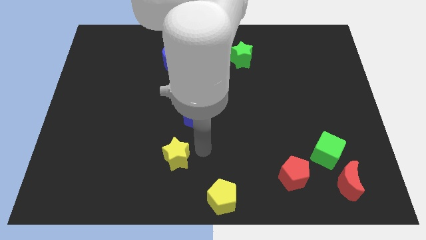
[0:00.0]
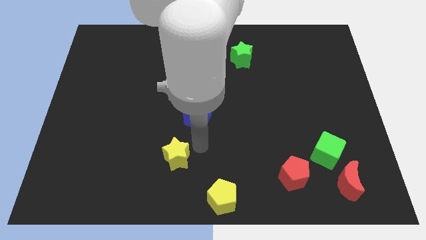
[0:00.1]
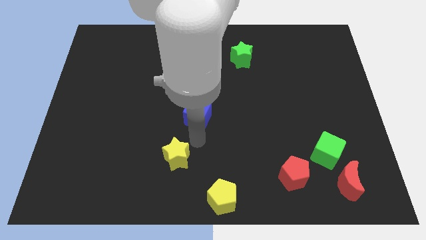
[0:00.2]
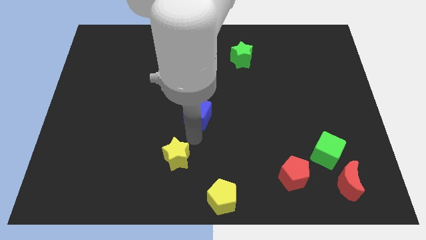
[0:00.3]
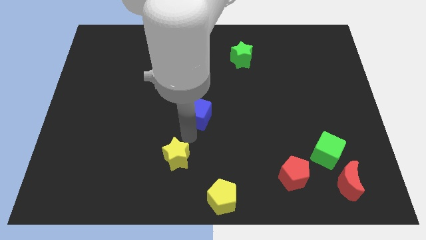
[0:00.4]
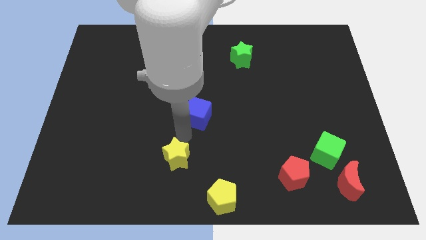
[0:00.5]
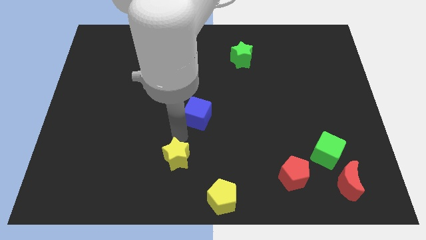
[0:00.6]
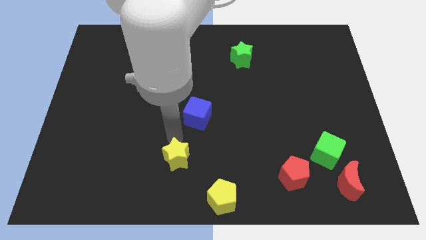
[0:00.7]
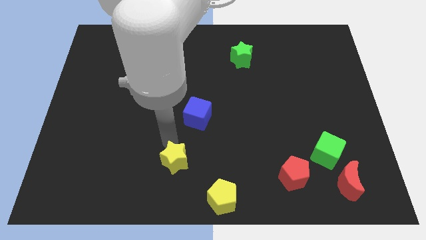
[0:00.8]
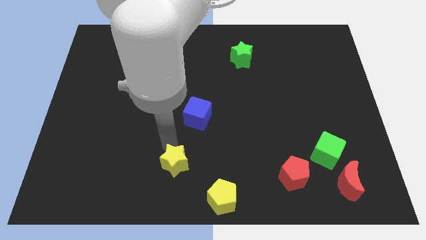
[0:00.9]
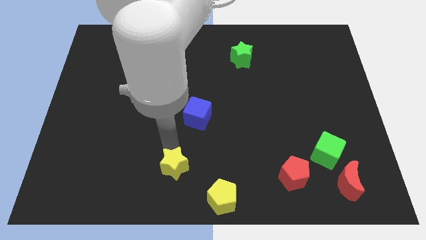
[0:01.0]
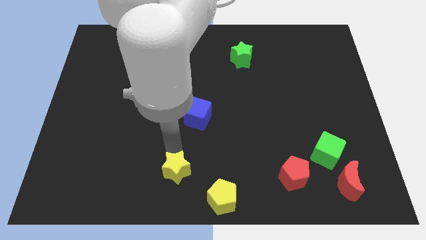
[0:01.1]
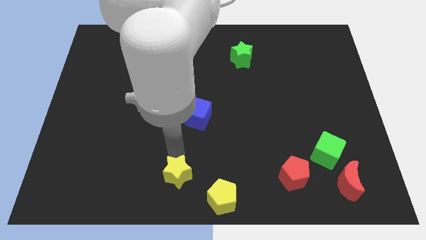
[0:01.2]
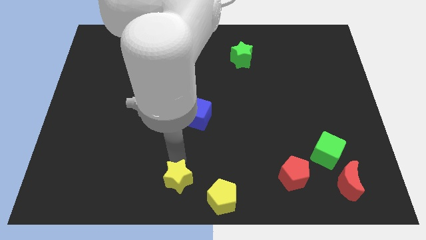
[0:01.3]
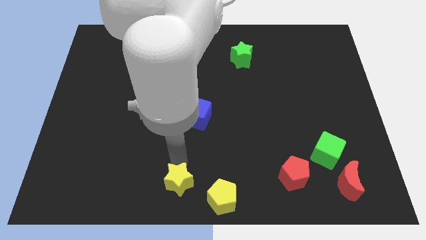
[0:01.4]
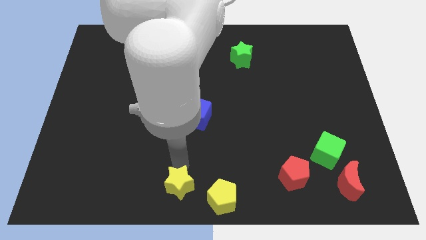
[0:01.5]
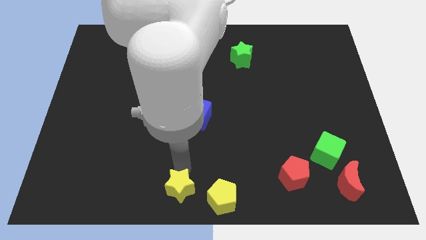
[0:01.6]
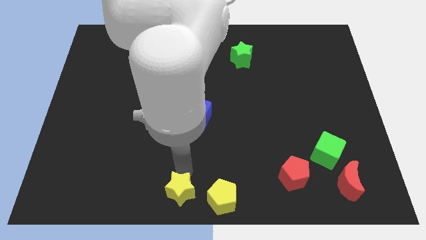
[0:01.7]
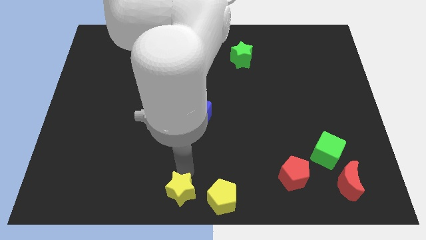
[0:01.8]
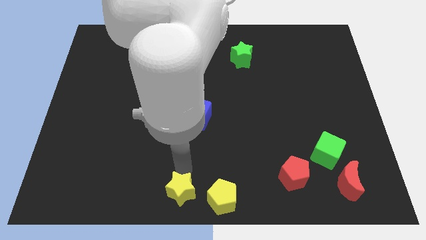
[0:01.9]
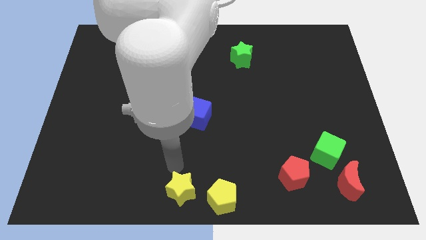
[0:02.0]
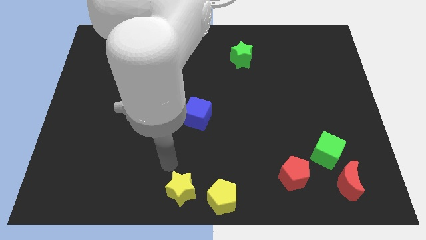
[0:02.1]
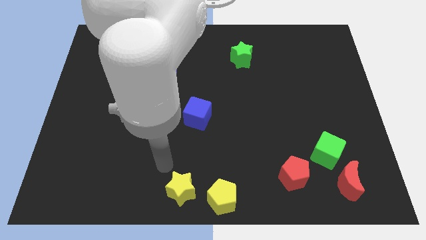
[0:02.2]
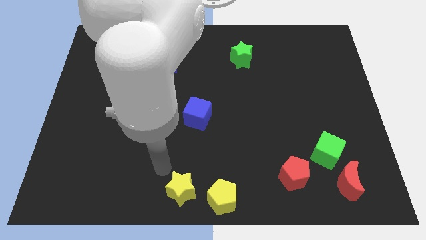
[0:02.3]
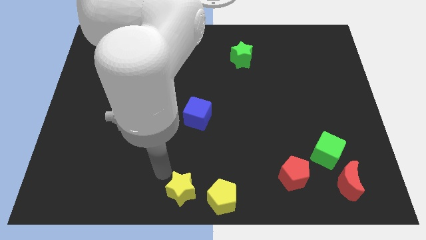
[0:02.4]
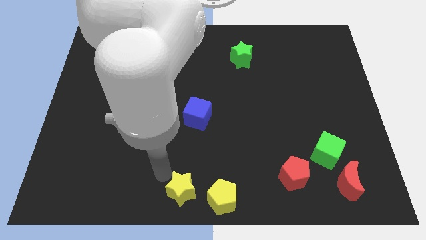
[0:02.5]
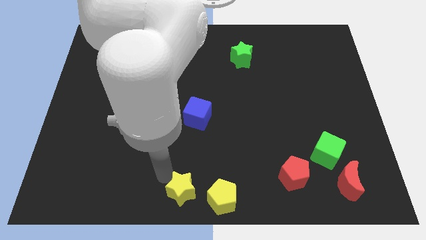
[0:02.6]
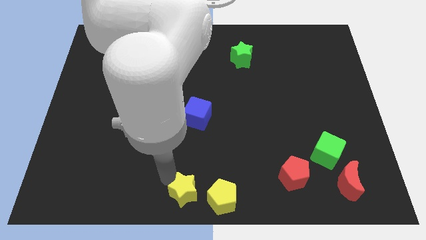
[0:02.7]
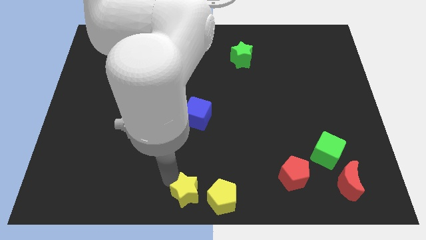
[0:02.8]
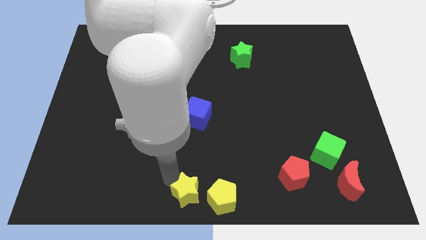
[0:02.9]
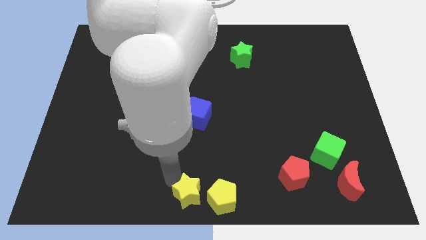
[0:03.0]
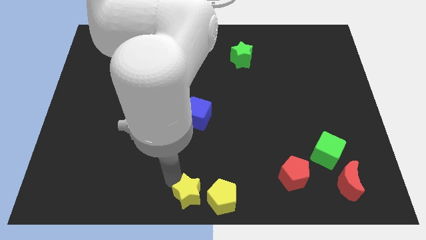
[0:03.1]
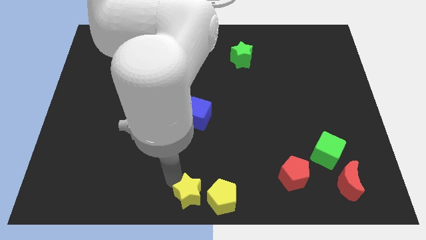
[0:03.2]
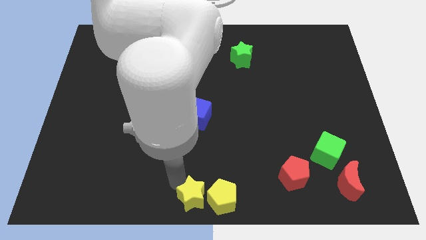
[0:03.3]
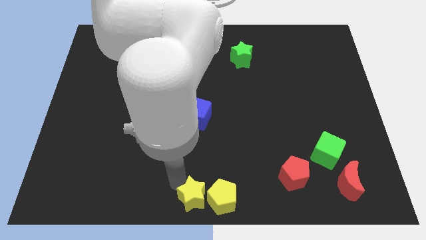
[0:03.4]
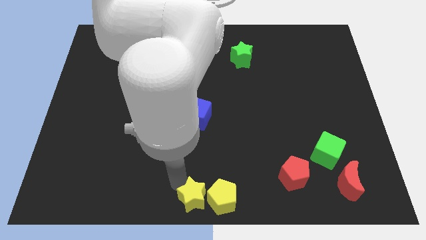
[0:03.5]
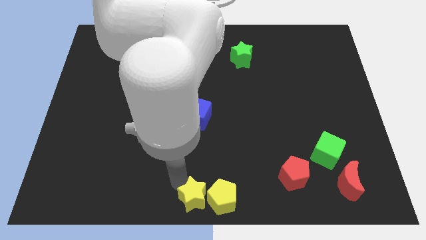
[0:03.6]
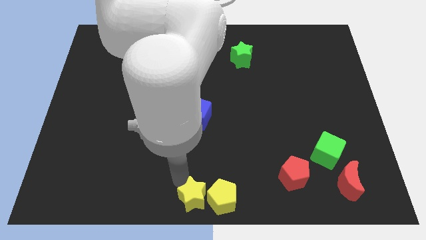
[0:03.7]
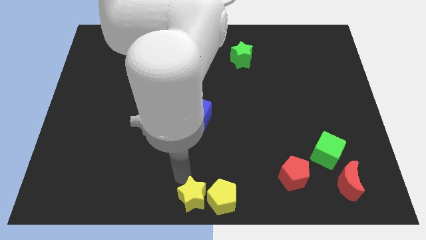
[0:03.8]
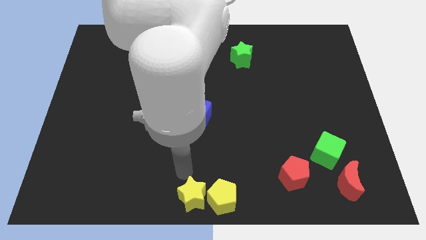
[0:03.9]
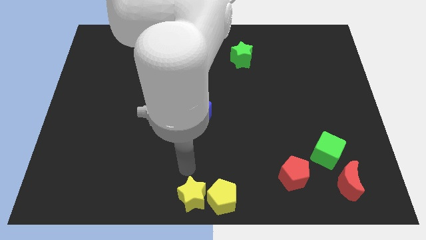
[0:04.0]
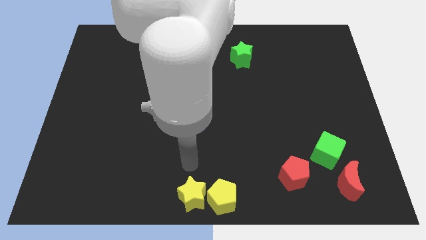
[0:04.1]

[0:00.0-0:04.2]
move the yellow star left to the yellow pentagon

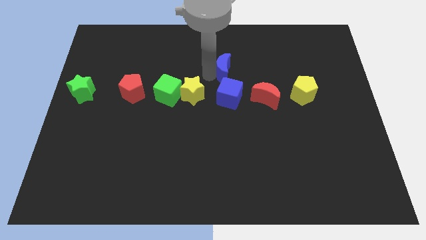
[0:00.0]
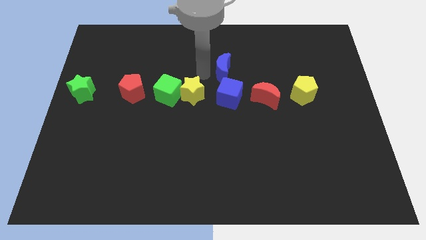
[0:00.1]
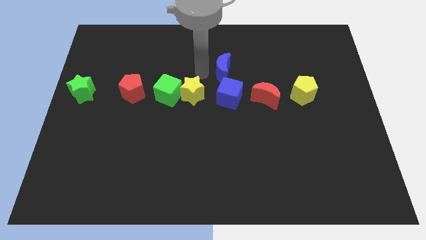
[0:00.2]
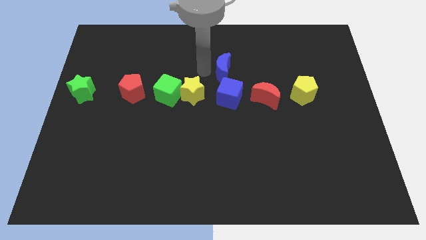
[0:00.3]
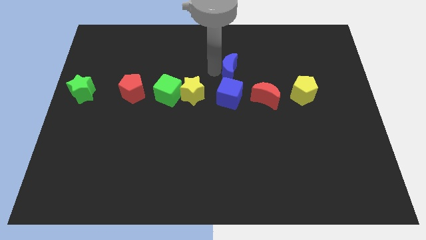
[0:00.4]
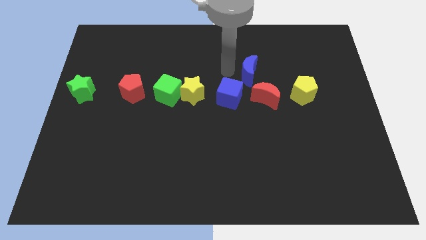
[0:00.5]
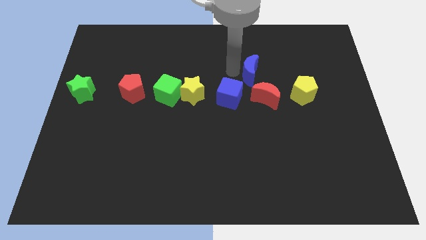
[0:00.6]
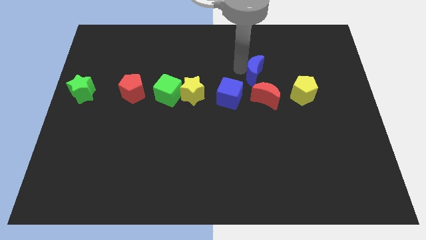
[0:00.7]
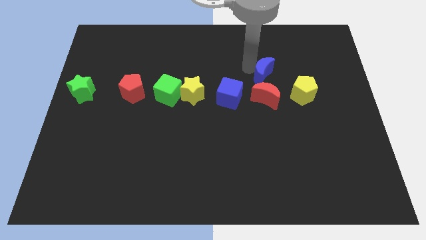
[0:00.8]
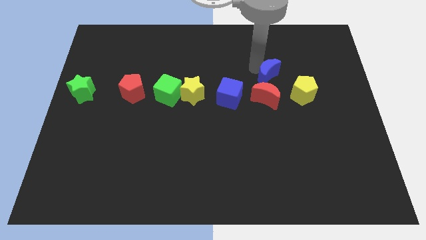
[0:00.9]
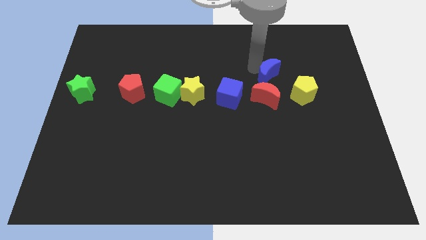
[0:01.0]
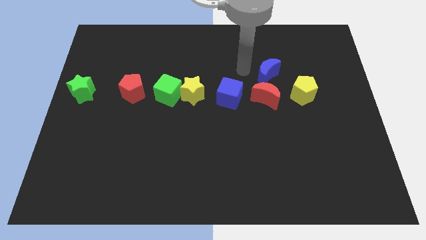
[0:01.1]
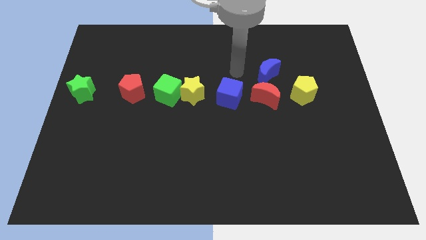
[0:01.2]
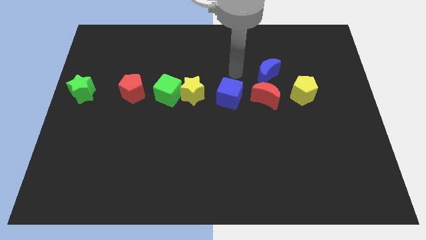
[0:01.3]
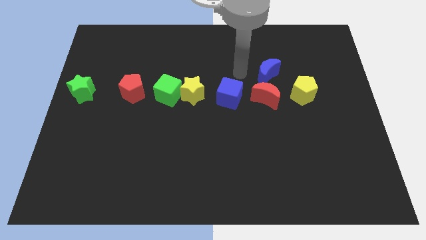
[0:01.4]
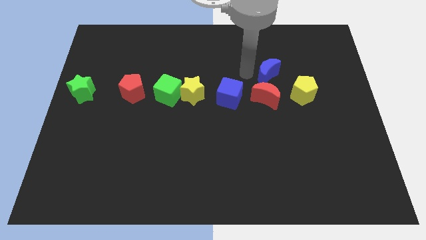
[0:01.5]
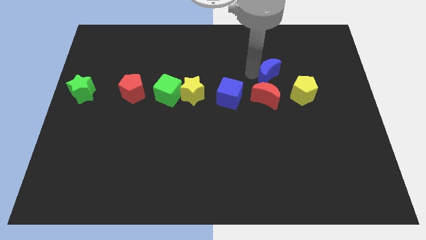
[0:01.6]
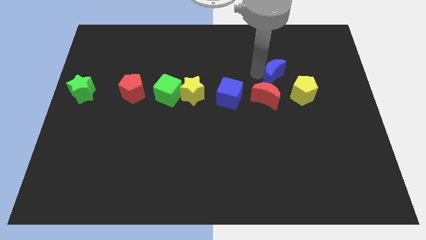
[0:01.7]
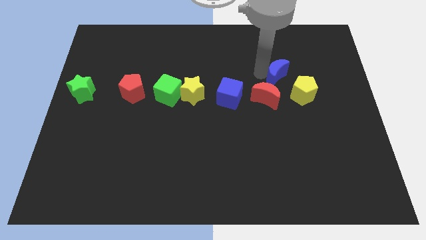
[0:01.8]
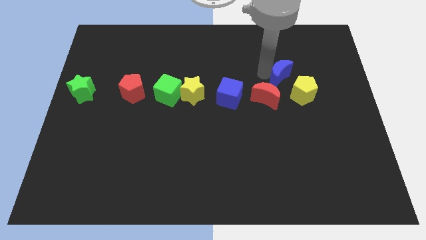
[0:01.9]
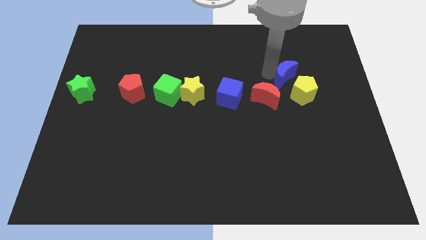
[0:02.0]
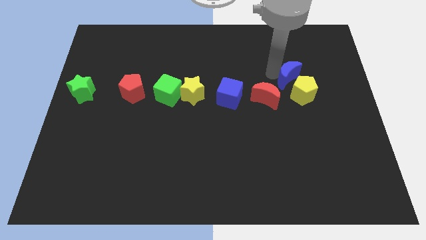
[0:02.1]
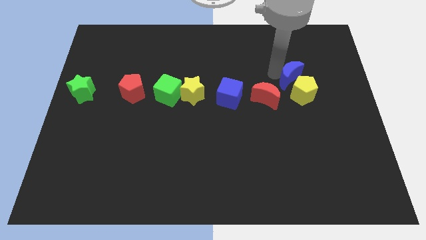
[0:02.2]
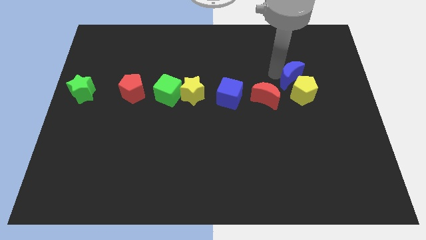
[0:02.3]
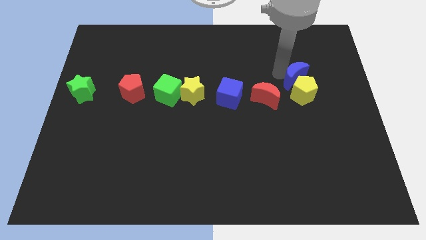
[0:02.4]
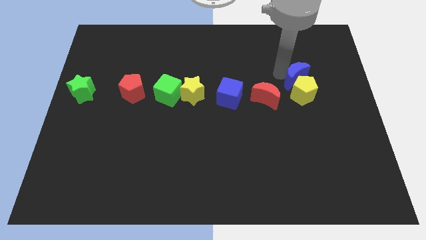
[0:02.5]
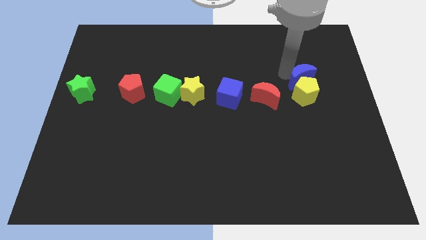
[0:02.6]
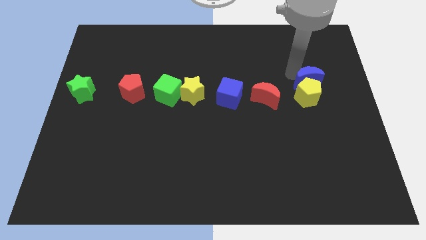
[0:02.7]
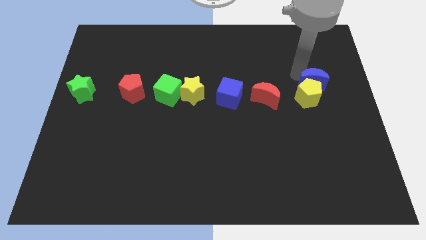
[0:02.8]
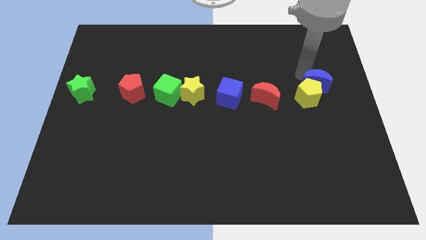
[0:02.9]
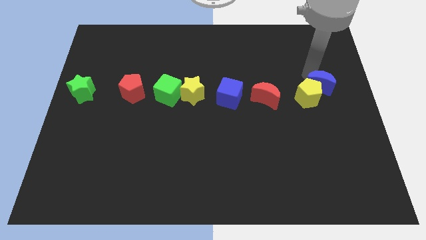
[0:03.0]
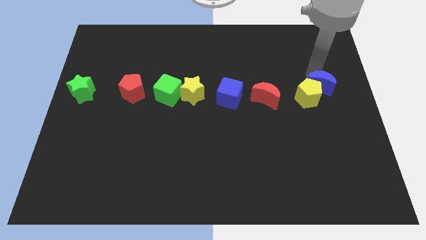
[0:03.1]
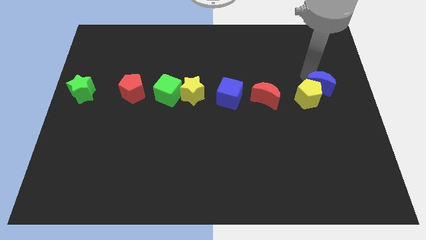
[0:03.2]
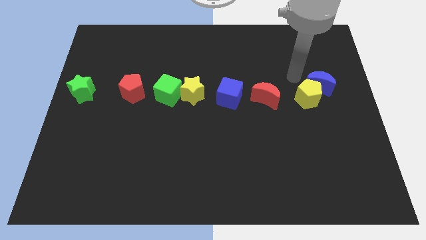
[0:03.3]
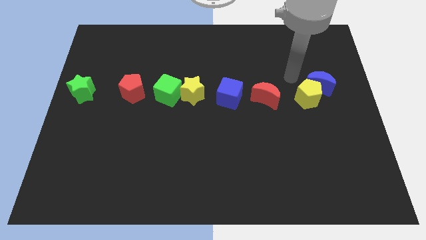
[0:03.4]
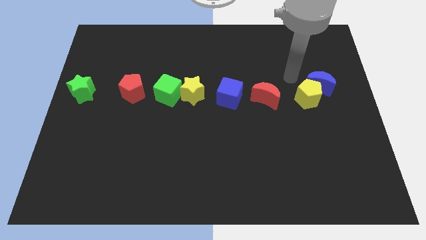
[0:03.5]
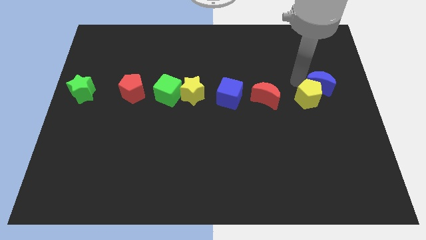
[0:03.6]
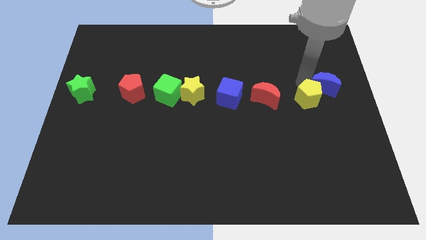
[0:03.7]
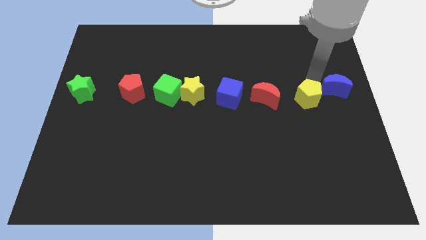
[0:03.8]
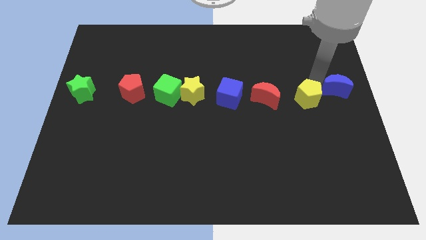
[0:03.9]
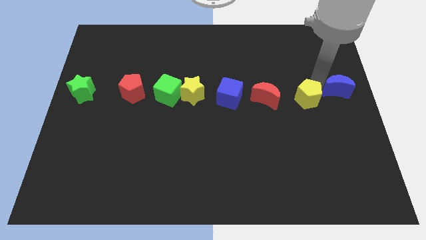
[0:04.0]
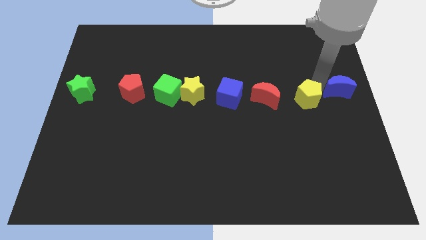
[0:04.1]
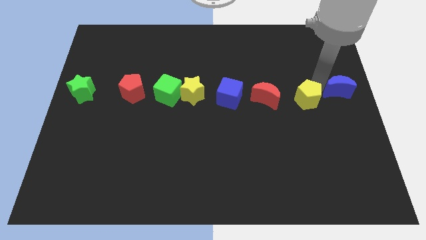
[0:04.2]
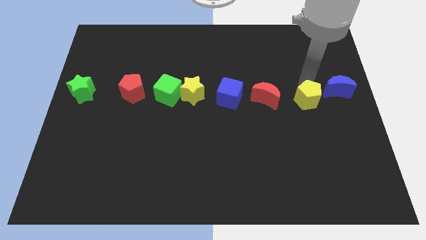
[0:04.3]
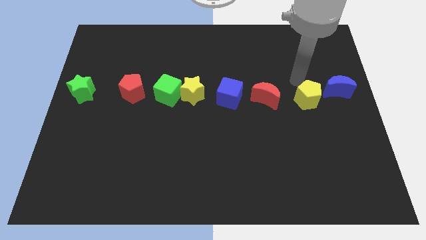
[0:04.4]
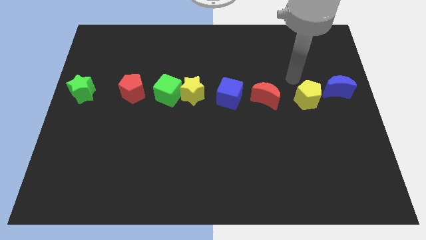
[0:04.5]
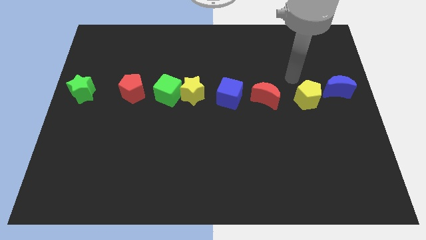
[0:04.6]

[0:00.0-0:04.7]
move the blue crescent to the right of the yellow pentagon
